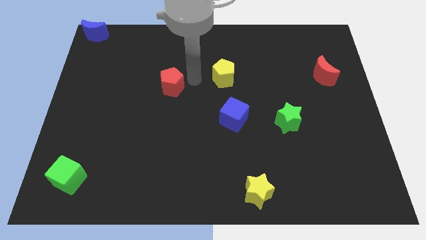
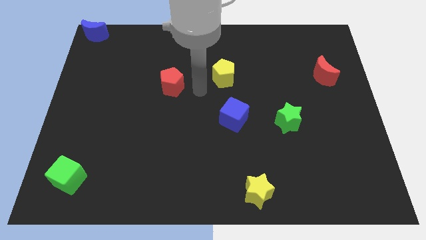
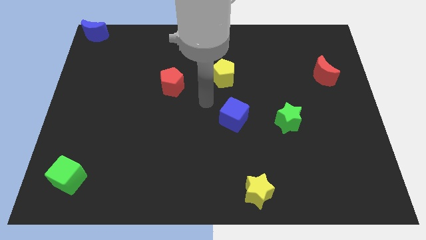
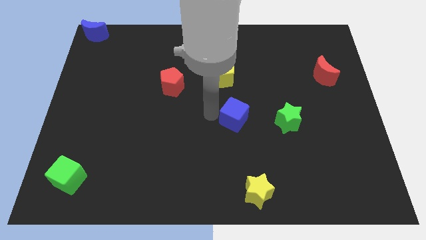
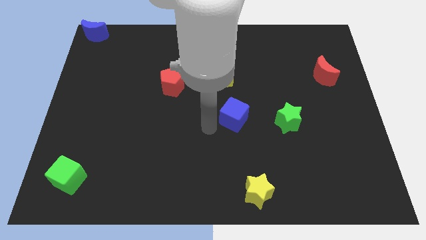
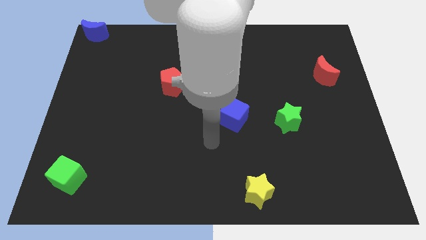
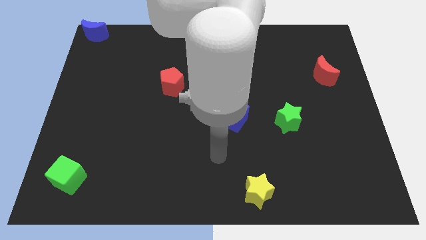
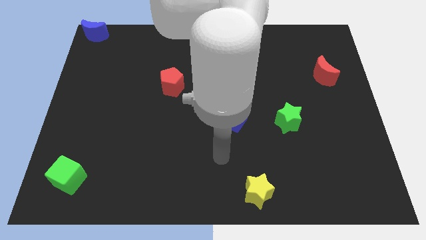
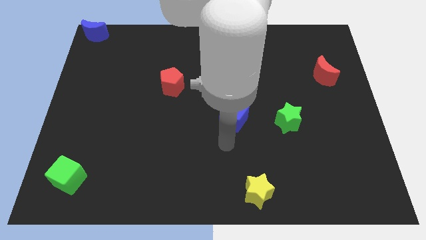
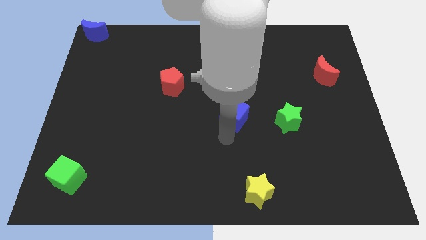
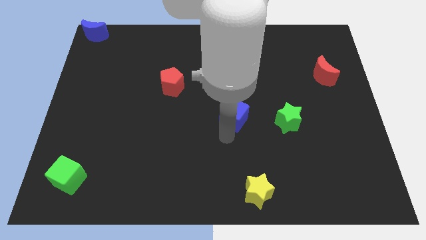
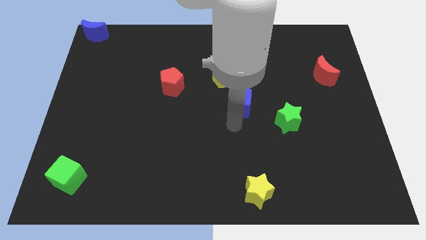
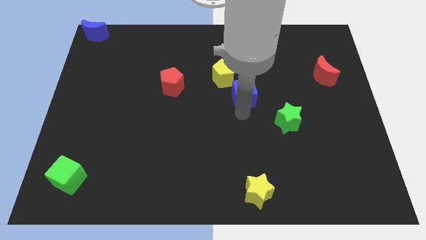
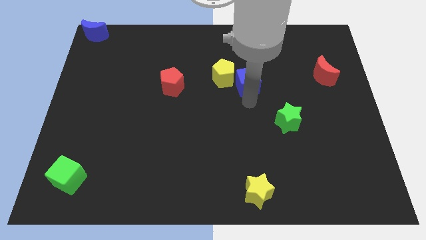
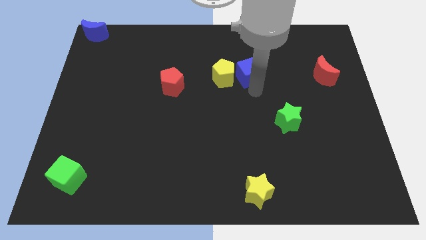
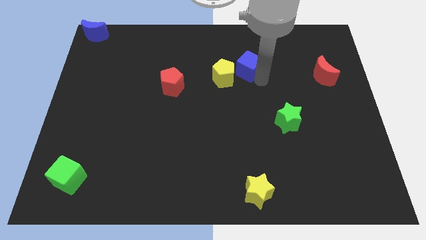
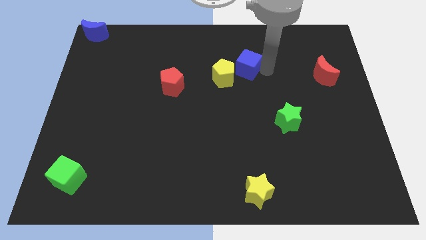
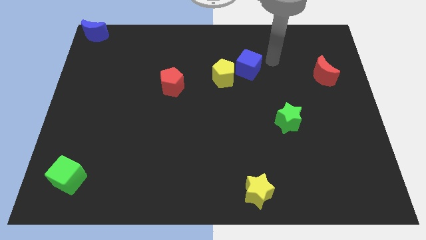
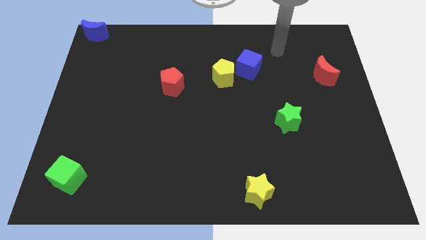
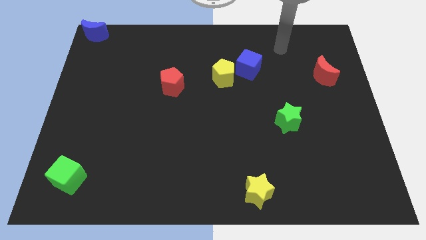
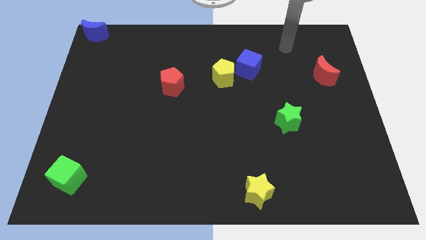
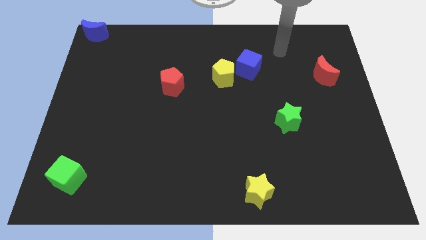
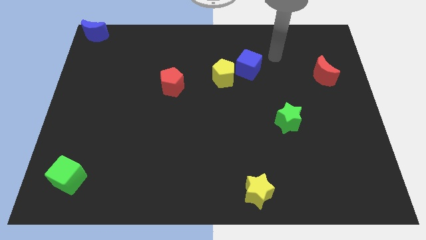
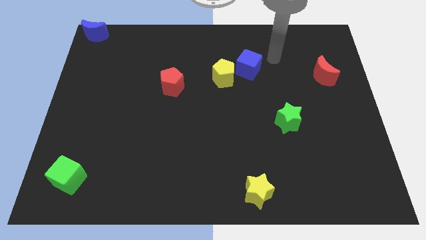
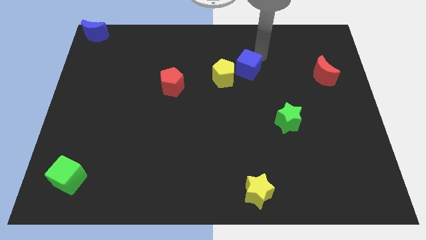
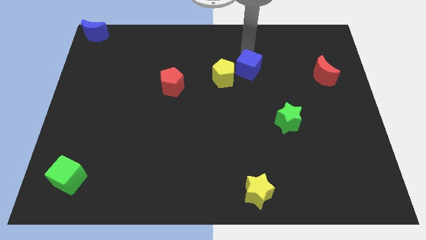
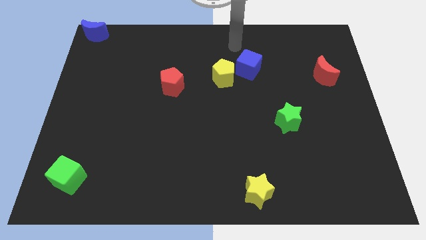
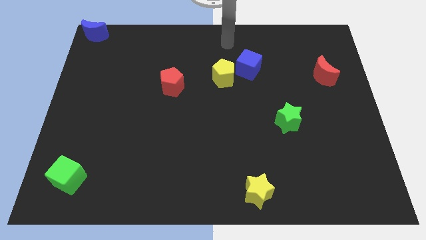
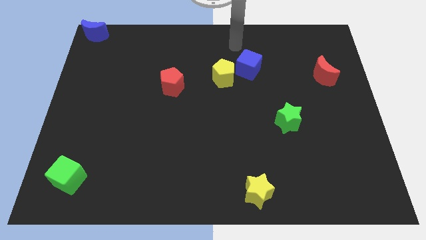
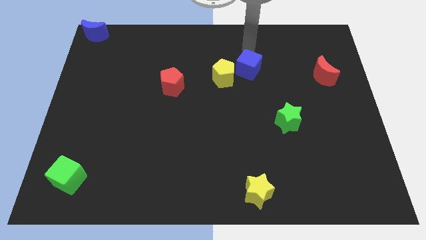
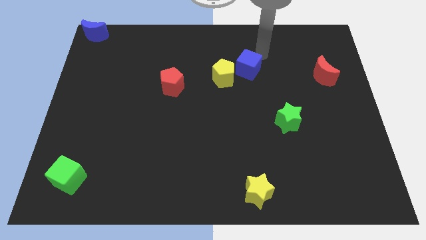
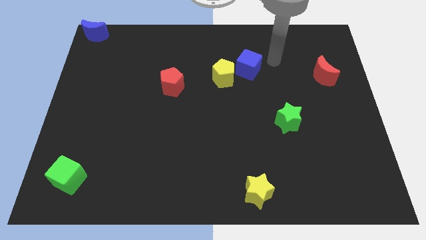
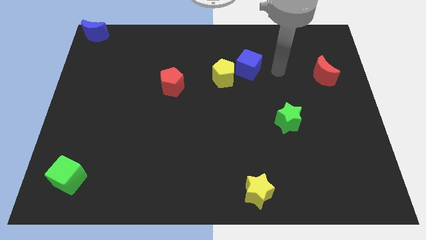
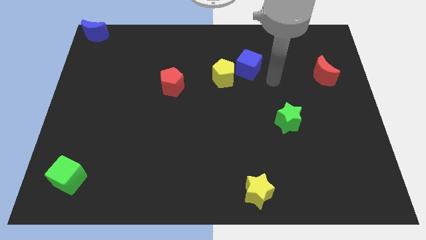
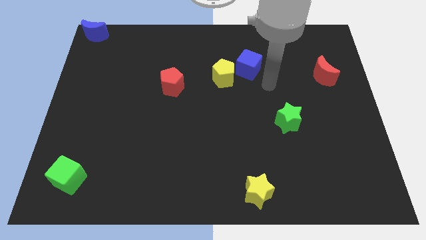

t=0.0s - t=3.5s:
place the blue cube at the top right of the yellow pentagon

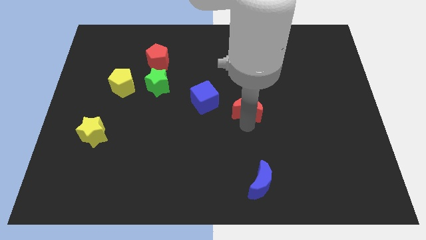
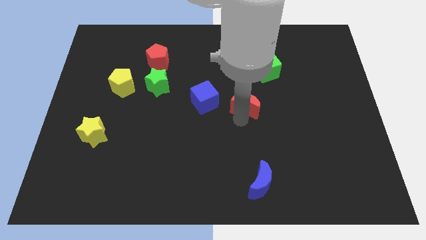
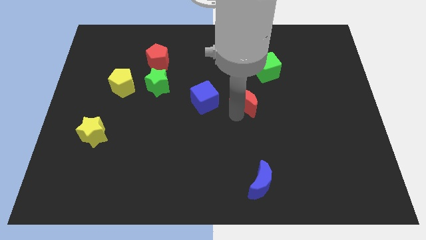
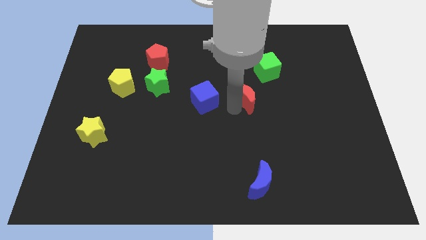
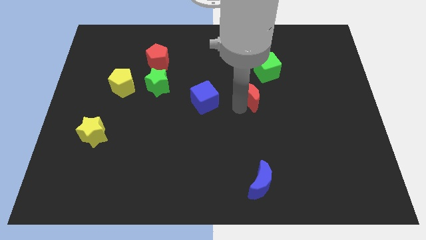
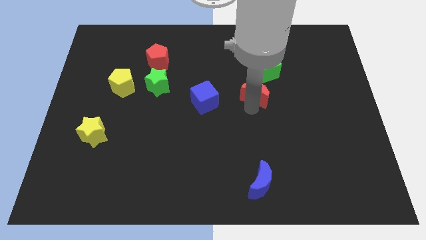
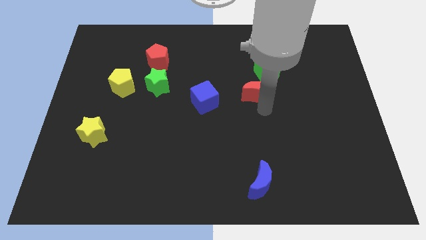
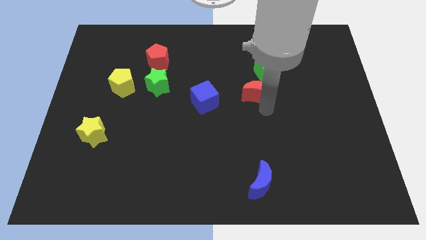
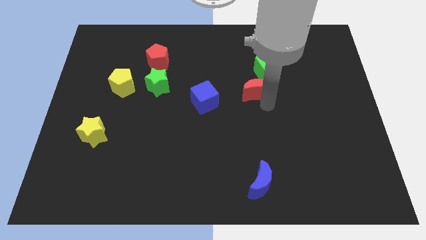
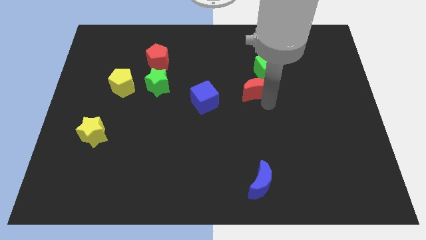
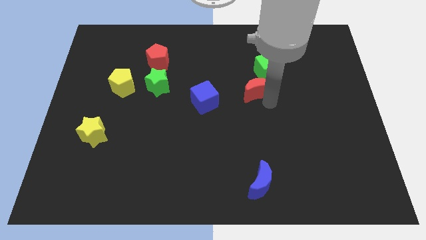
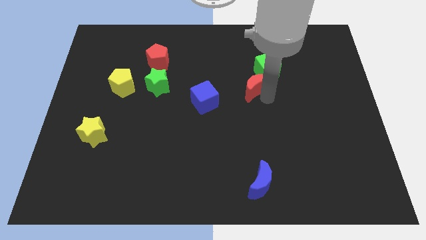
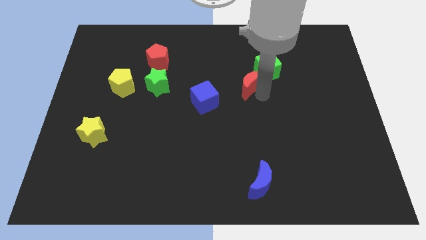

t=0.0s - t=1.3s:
push red moon into green cube

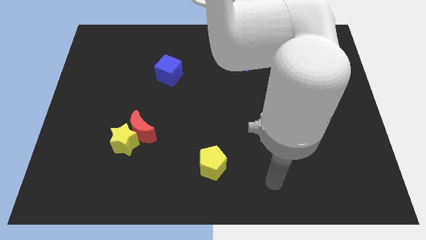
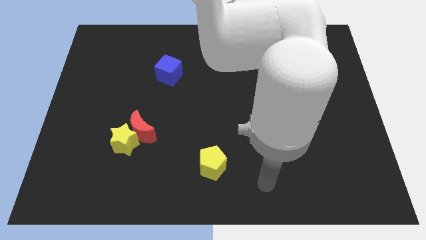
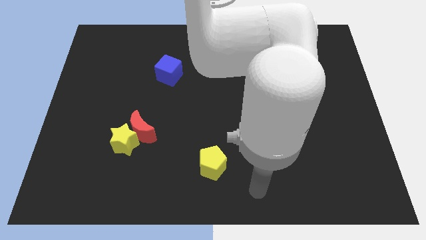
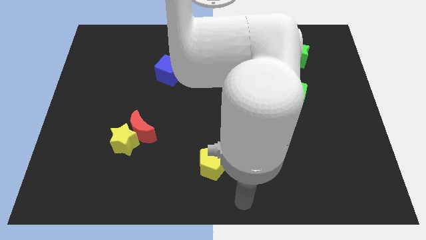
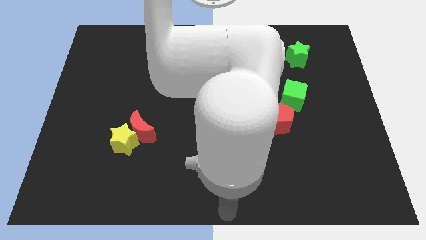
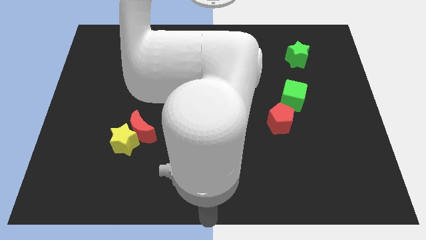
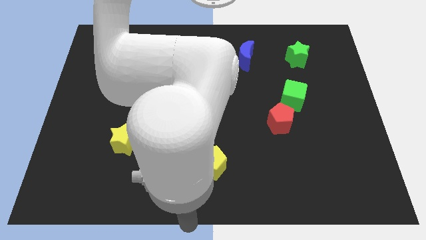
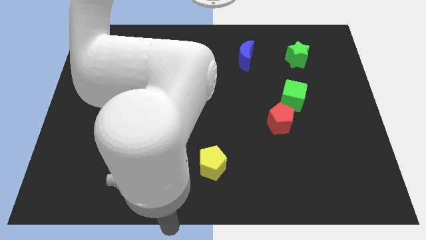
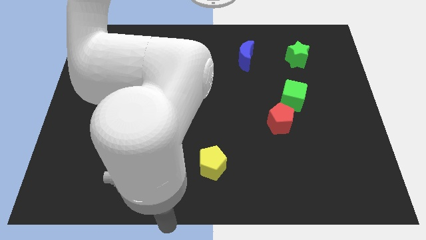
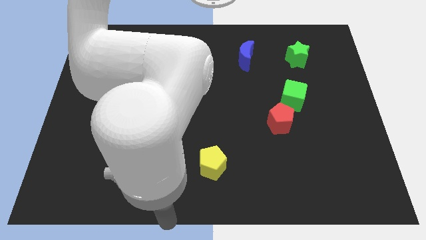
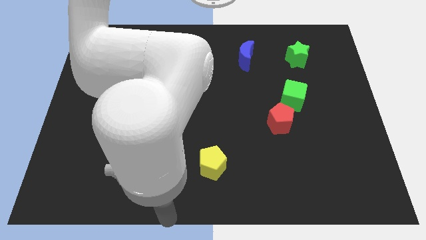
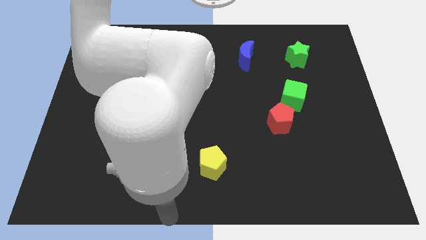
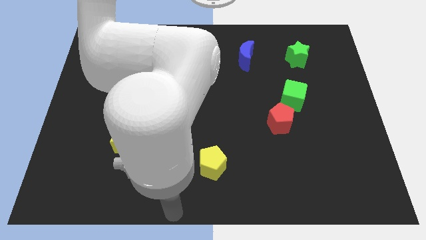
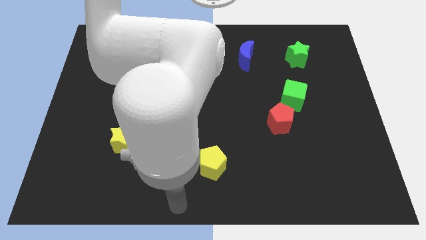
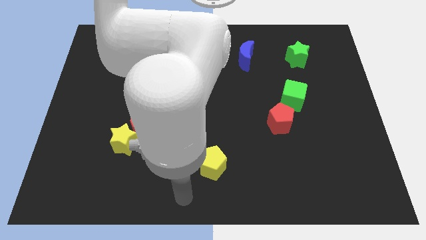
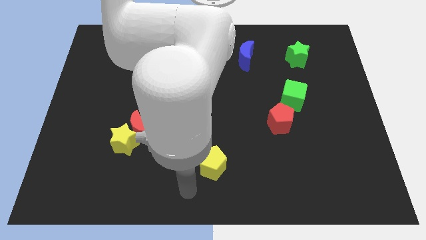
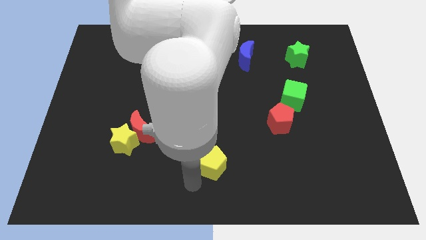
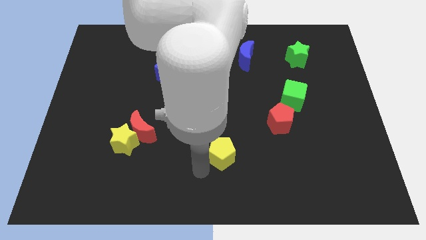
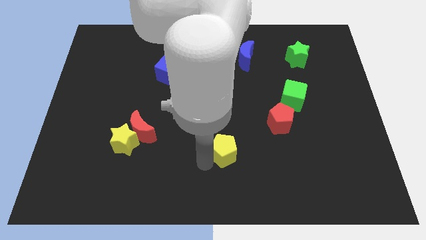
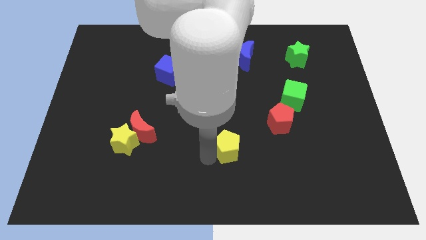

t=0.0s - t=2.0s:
move the yellow pentagon to the top of the board

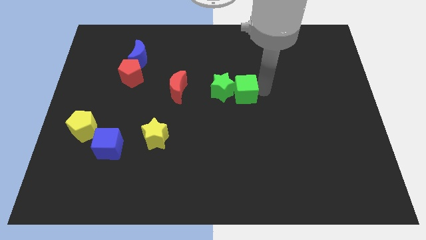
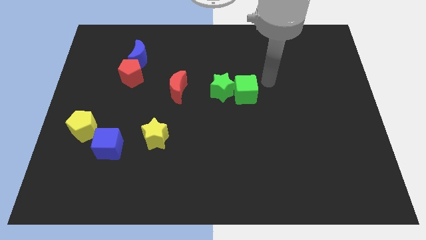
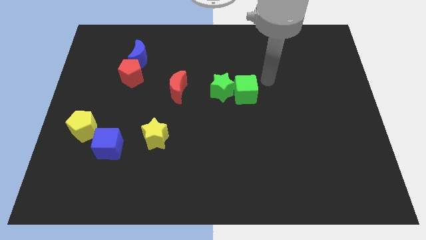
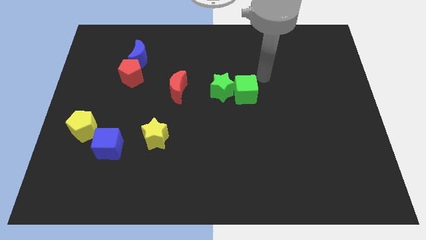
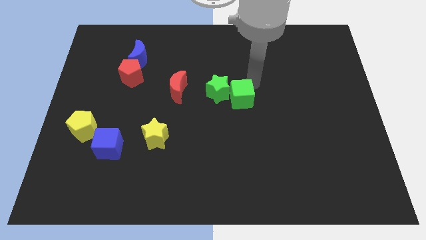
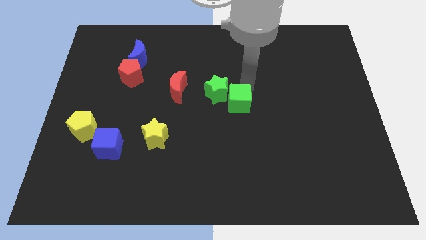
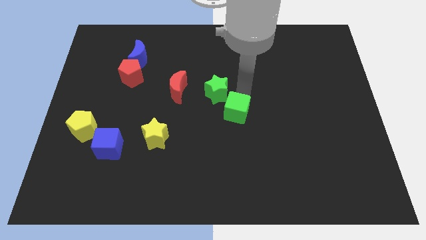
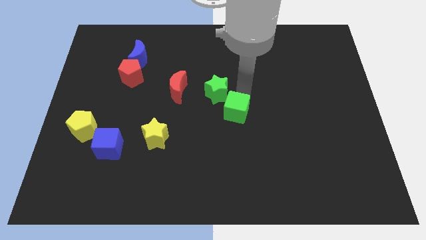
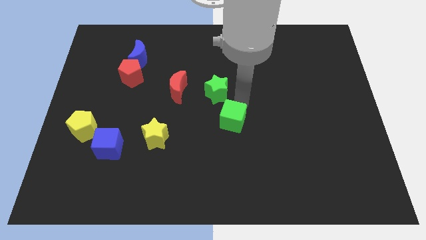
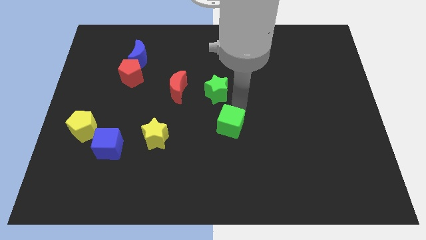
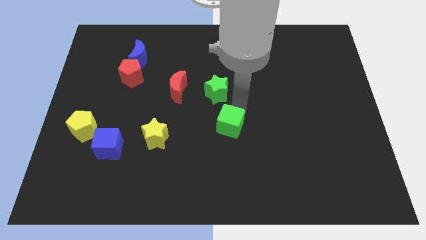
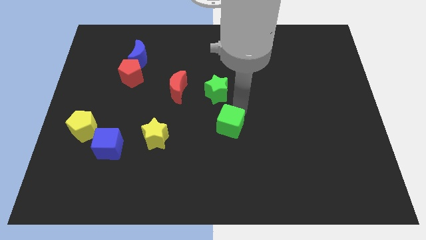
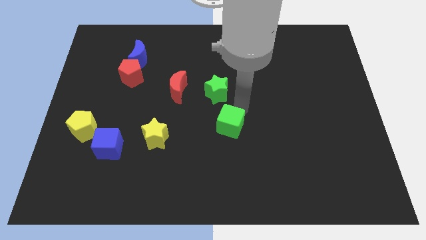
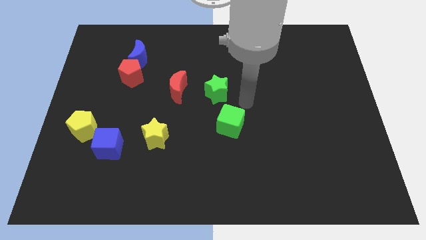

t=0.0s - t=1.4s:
separate the green cube from the green star

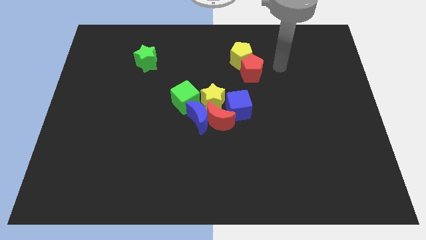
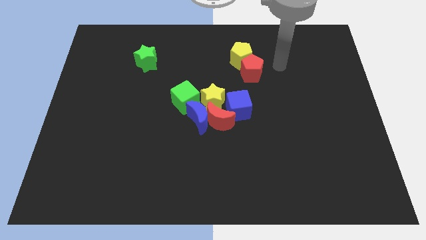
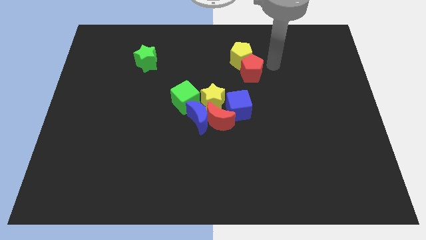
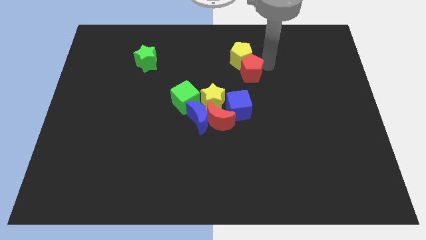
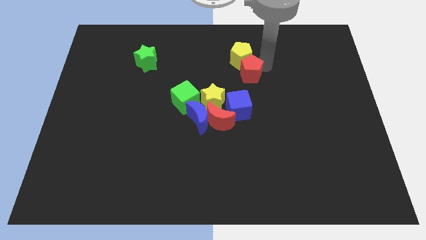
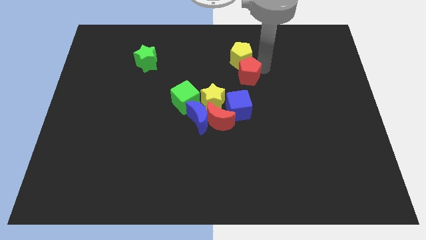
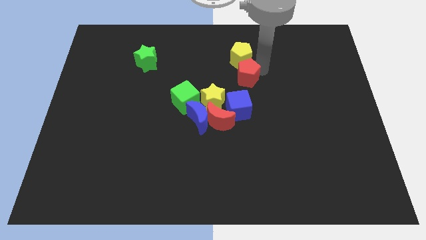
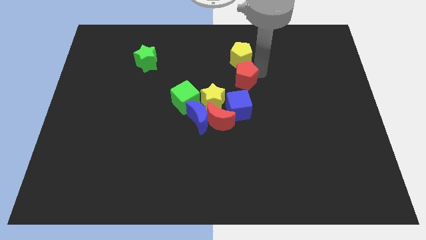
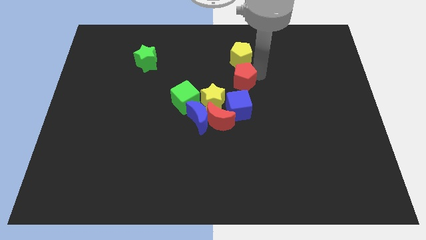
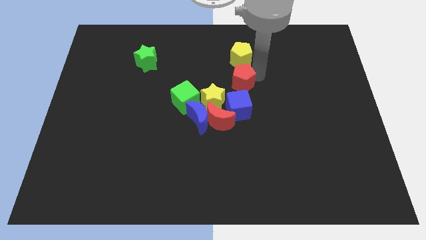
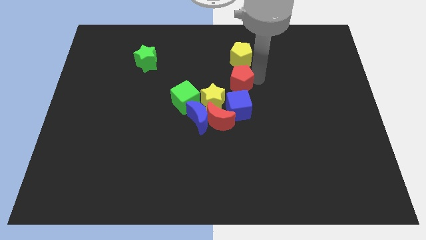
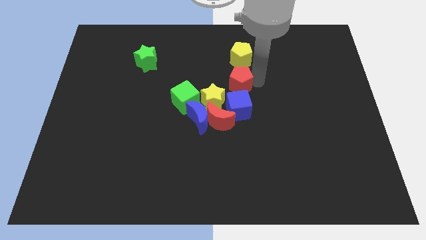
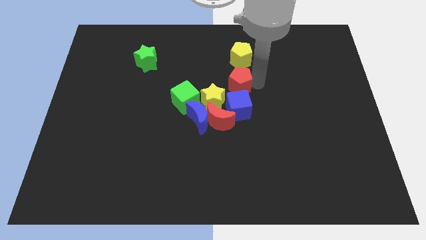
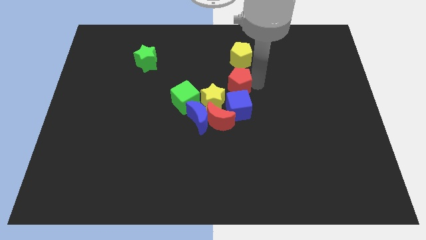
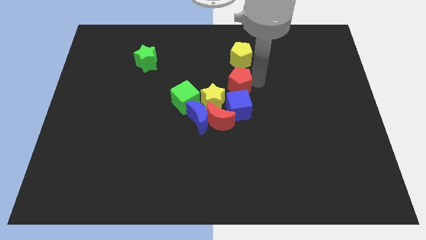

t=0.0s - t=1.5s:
place the red pentagon above the blue cube
